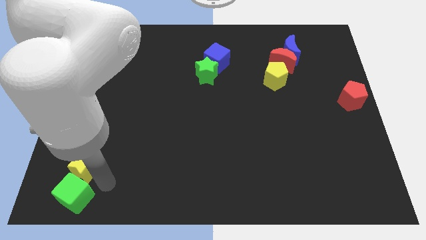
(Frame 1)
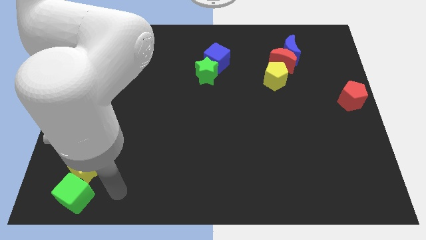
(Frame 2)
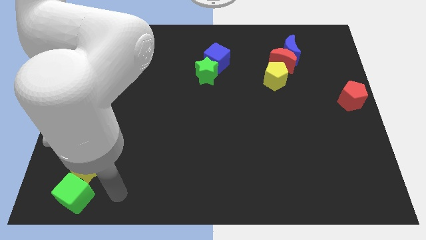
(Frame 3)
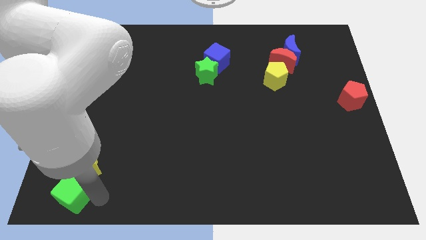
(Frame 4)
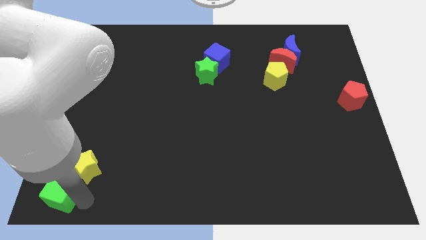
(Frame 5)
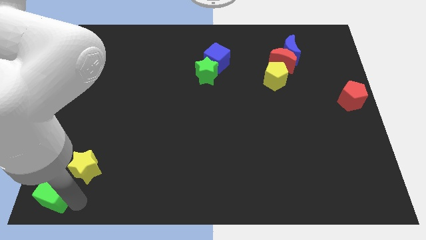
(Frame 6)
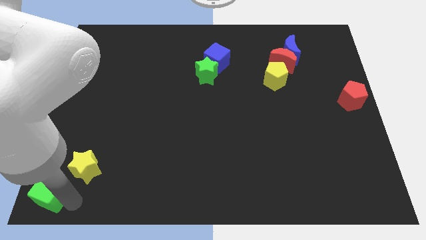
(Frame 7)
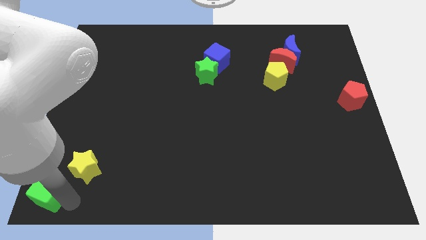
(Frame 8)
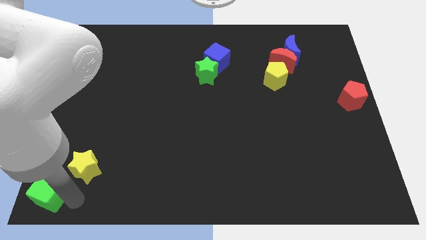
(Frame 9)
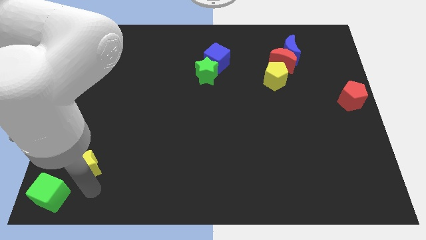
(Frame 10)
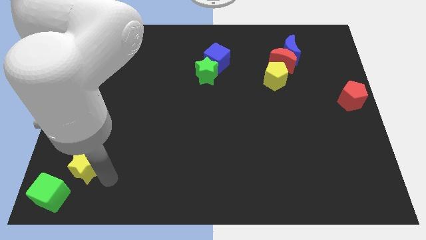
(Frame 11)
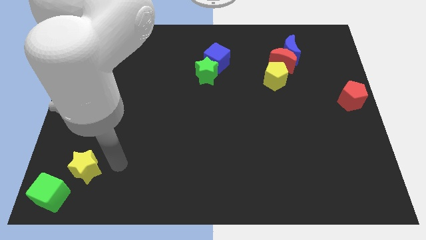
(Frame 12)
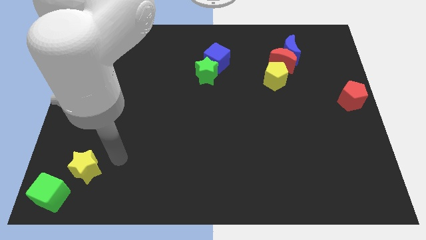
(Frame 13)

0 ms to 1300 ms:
place green cube at bottom left corner of the board

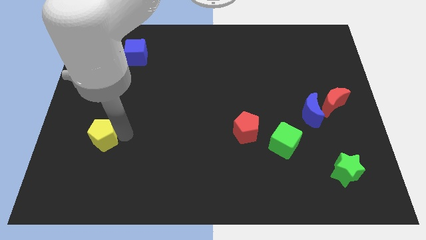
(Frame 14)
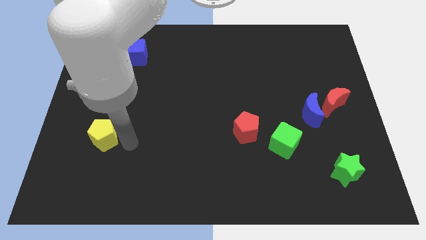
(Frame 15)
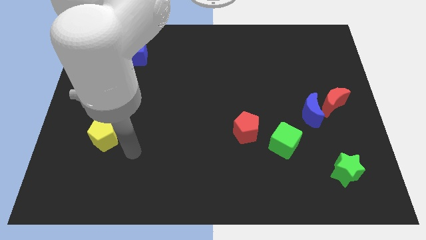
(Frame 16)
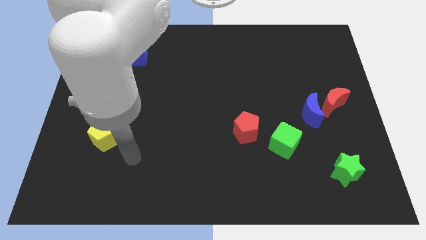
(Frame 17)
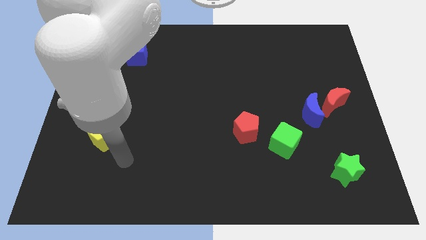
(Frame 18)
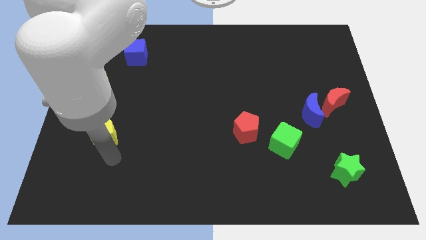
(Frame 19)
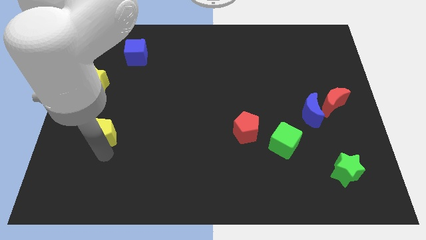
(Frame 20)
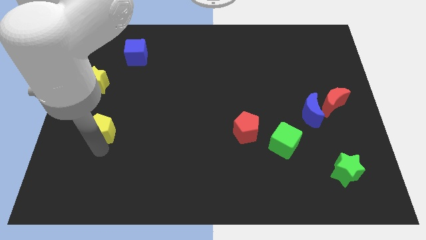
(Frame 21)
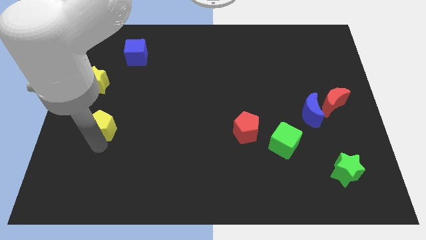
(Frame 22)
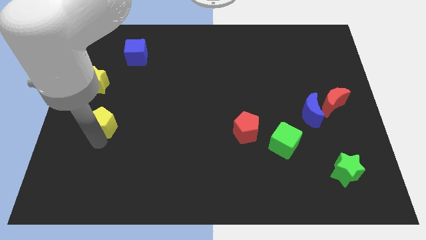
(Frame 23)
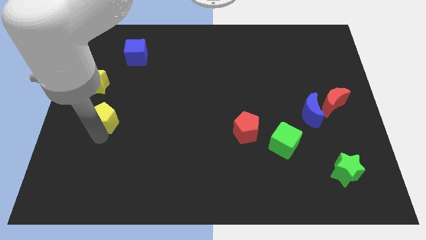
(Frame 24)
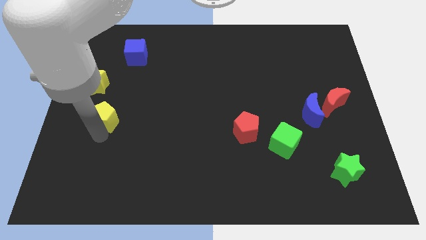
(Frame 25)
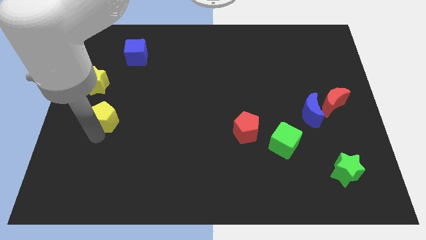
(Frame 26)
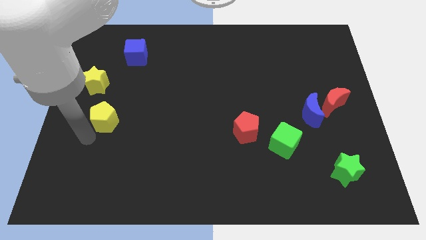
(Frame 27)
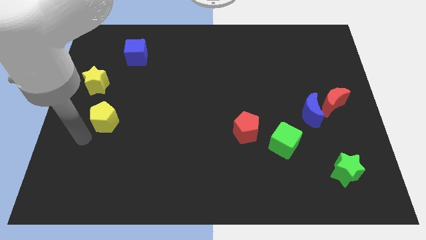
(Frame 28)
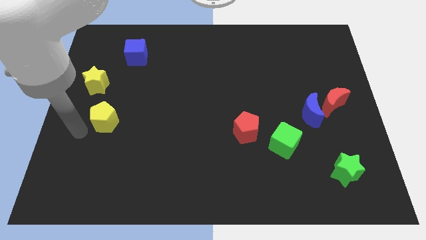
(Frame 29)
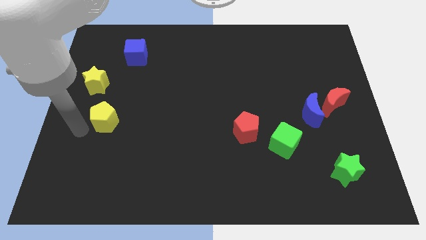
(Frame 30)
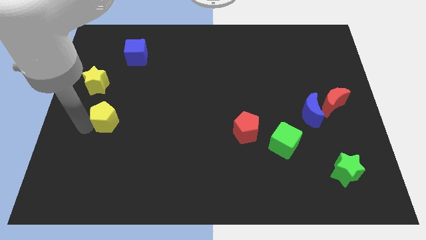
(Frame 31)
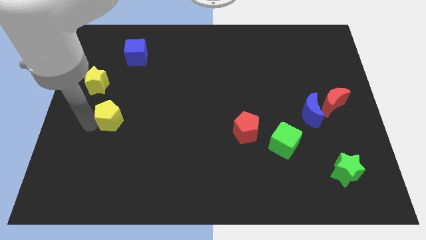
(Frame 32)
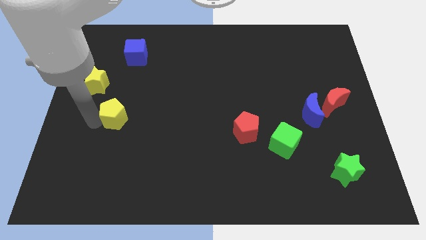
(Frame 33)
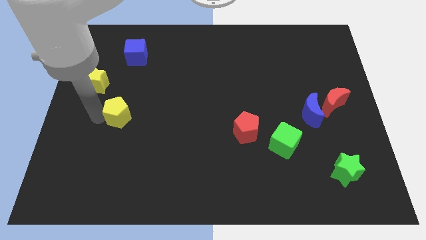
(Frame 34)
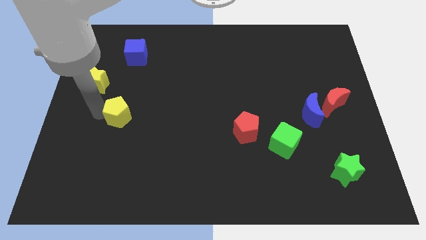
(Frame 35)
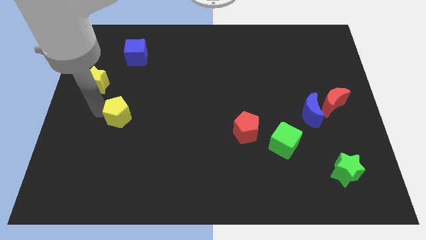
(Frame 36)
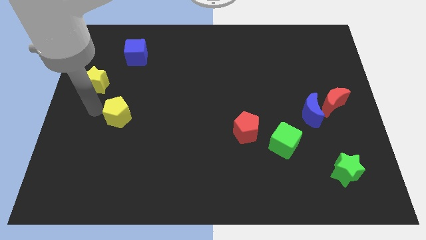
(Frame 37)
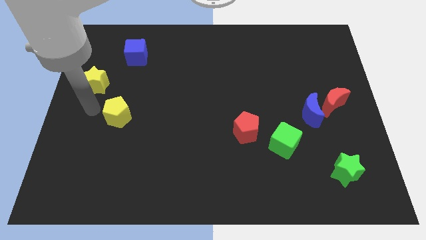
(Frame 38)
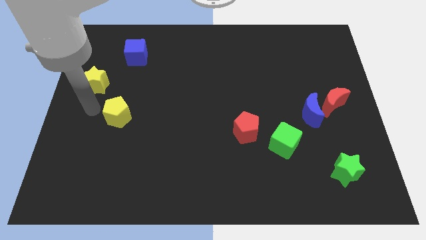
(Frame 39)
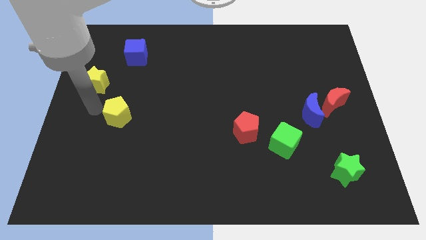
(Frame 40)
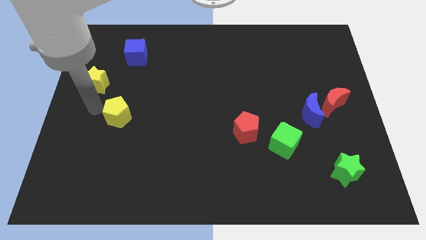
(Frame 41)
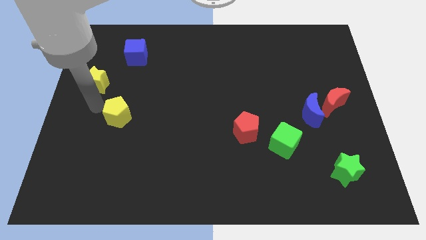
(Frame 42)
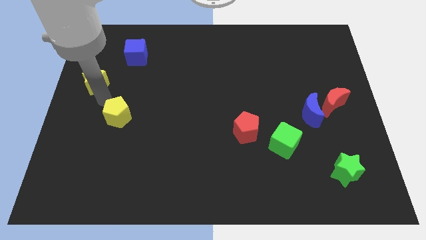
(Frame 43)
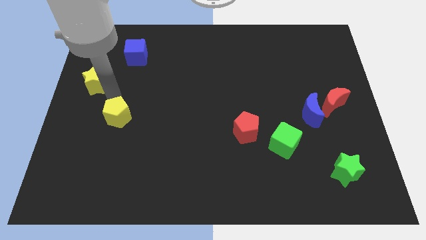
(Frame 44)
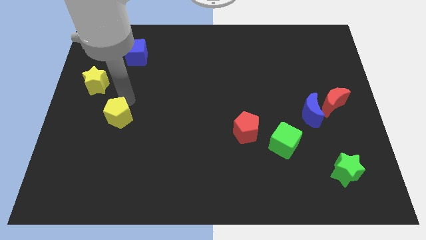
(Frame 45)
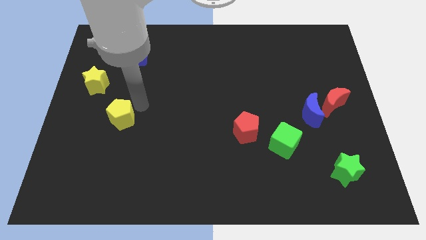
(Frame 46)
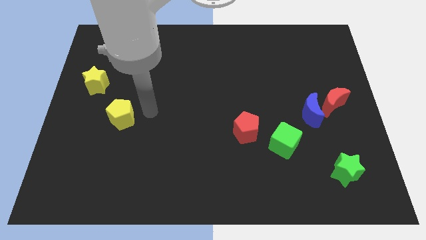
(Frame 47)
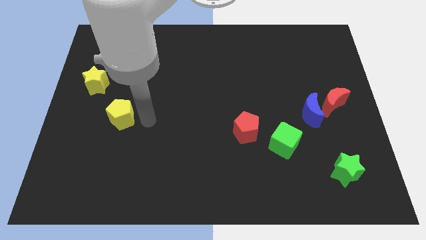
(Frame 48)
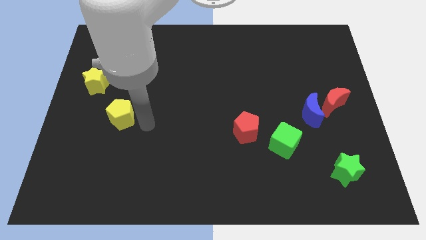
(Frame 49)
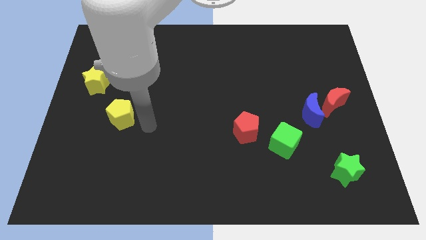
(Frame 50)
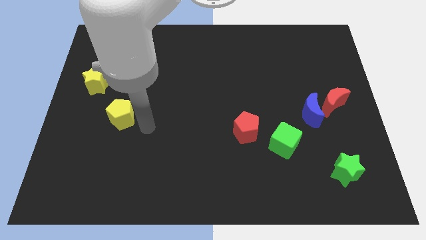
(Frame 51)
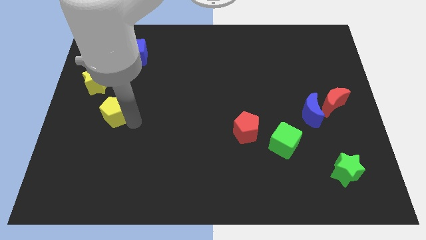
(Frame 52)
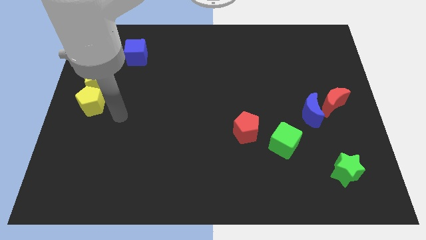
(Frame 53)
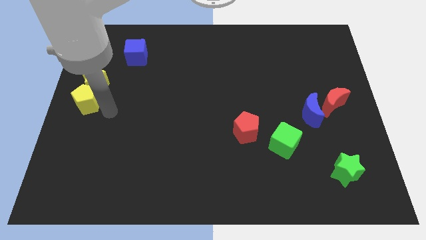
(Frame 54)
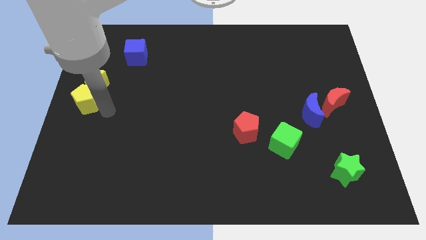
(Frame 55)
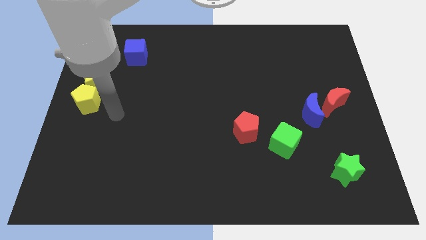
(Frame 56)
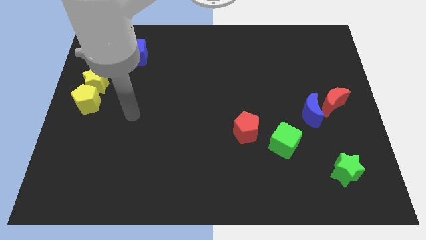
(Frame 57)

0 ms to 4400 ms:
push the yellow pentagon into the yellow star

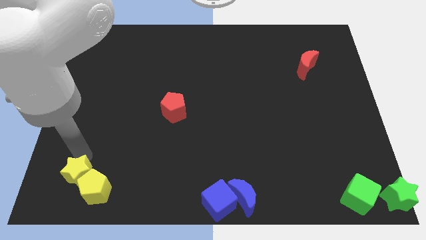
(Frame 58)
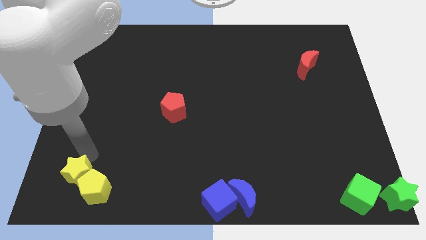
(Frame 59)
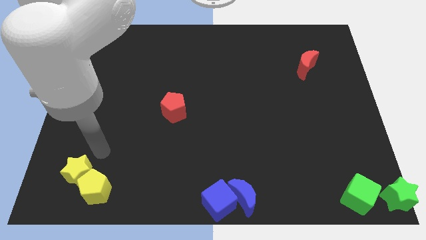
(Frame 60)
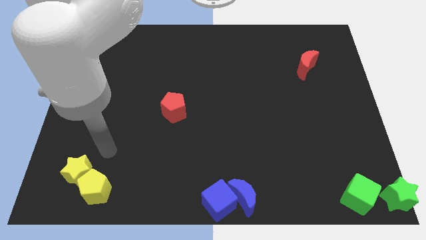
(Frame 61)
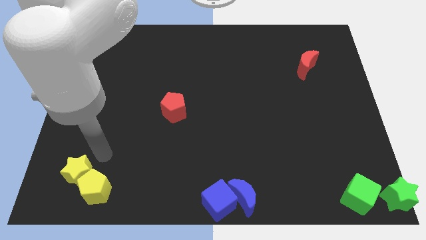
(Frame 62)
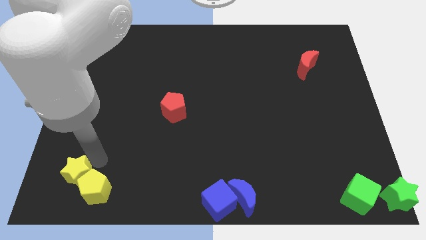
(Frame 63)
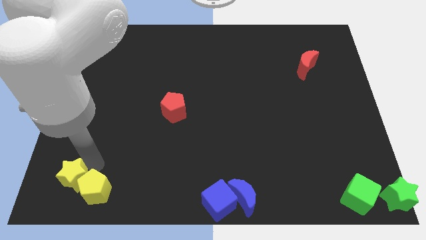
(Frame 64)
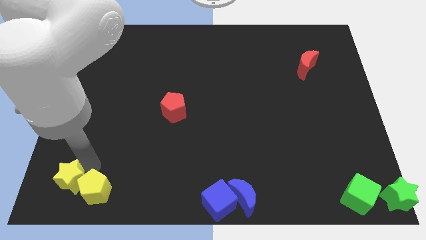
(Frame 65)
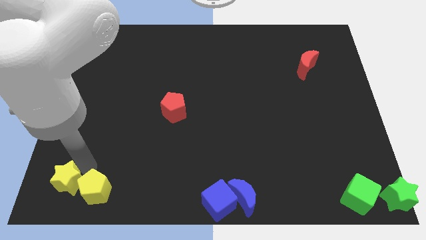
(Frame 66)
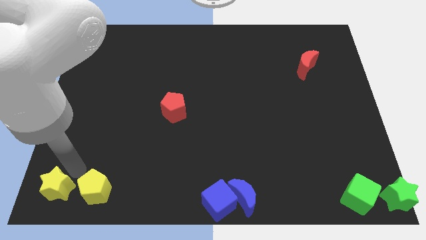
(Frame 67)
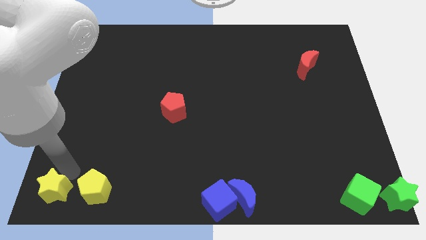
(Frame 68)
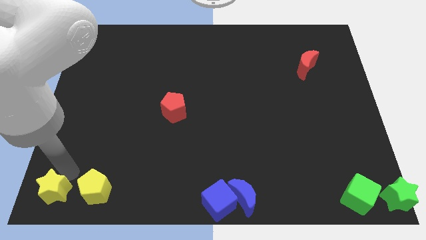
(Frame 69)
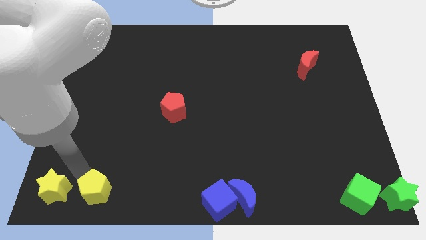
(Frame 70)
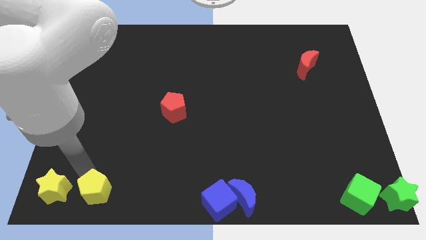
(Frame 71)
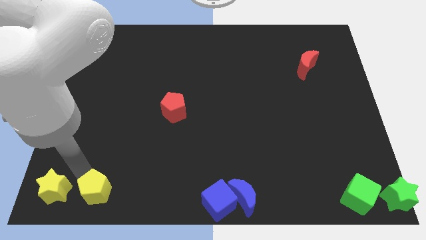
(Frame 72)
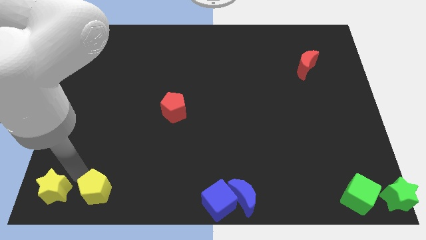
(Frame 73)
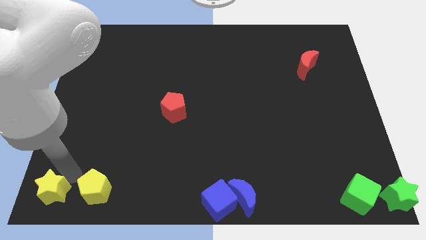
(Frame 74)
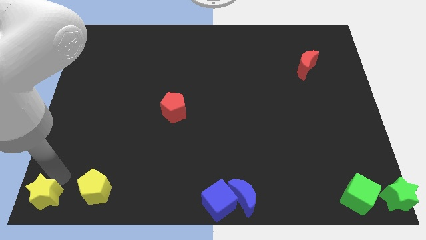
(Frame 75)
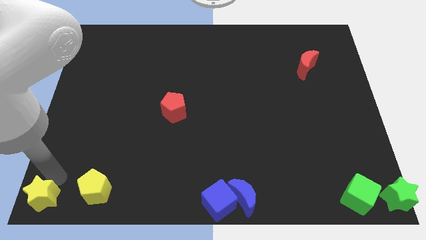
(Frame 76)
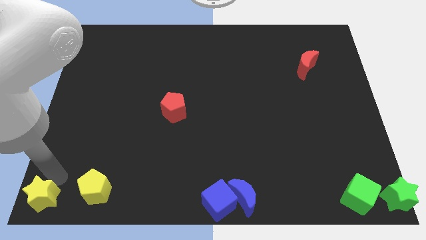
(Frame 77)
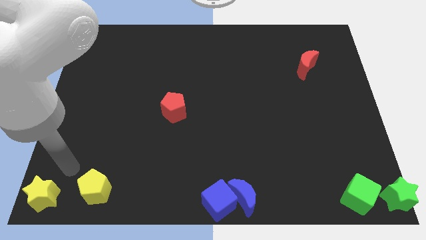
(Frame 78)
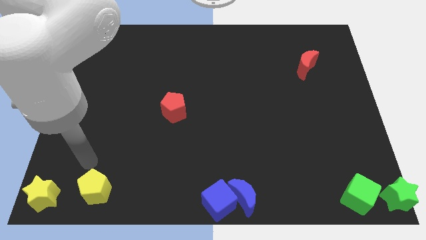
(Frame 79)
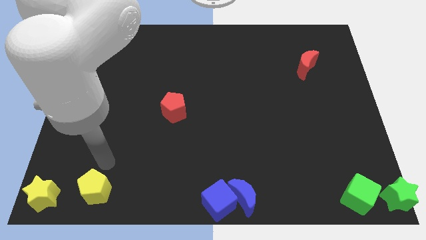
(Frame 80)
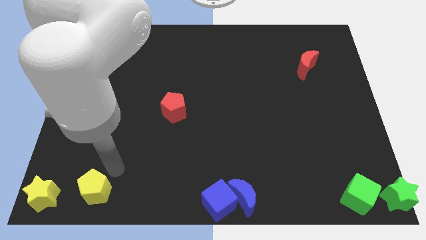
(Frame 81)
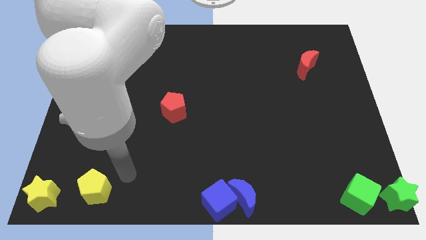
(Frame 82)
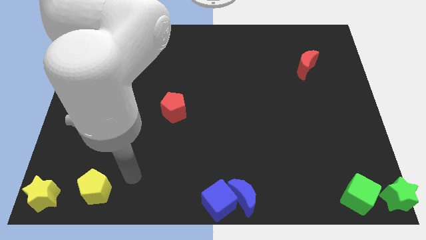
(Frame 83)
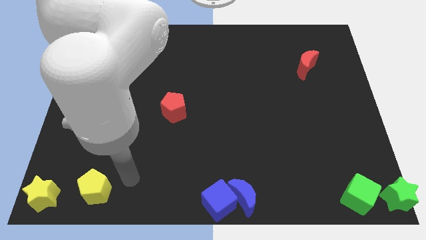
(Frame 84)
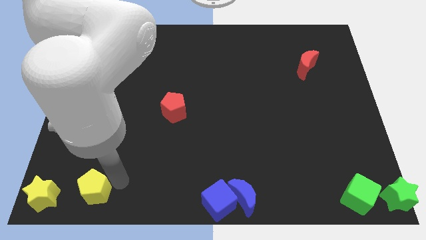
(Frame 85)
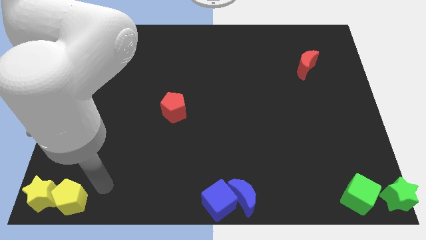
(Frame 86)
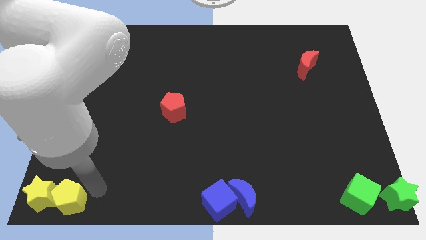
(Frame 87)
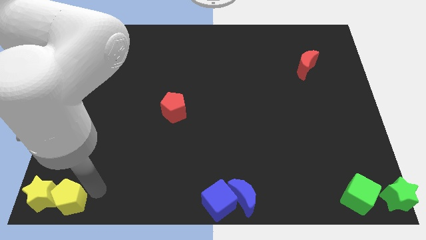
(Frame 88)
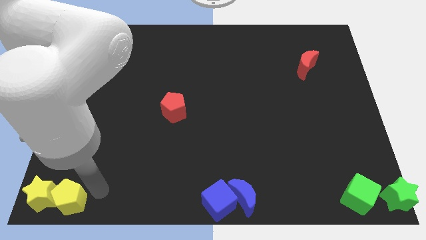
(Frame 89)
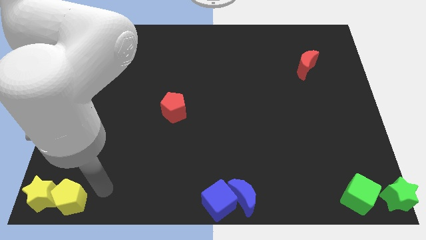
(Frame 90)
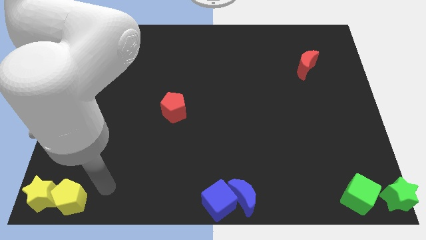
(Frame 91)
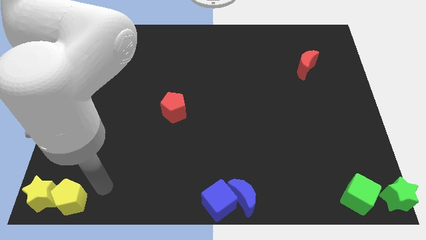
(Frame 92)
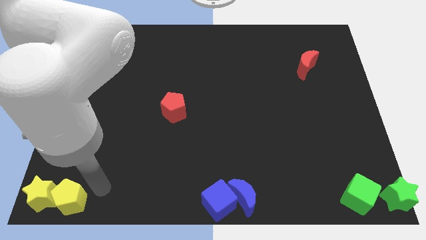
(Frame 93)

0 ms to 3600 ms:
place the yellow blocks at the bottom left corner of the board
